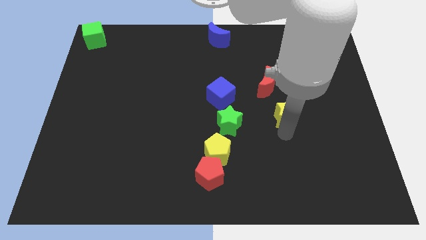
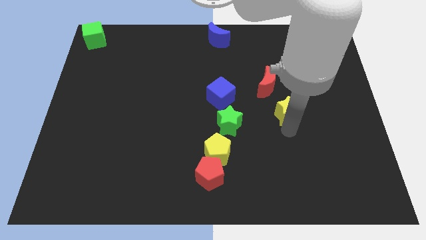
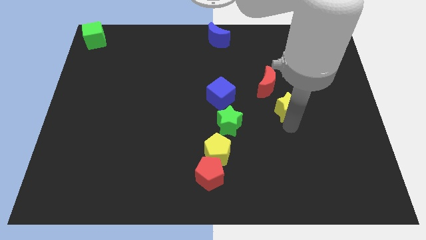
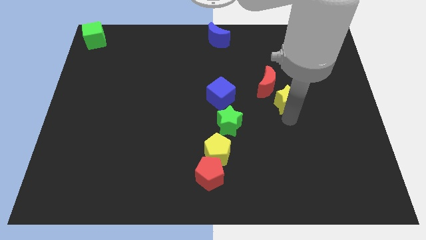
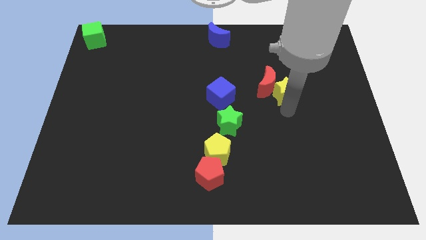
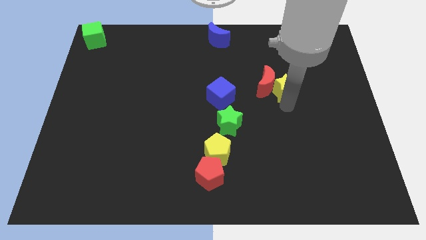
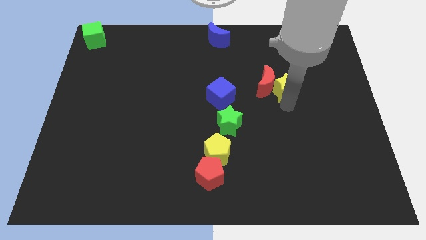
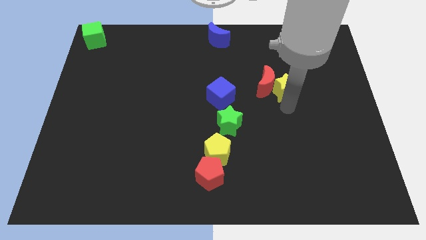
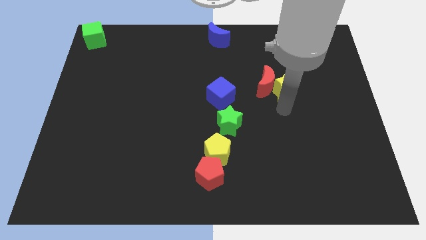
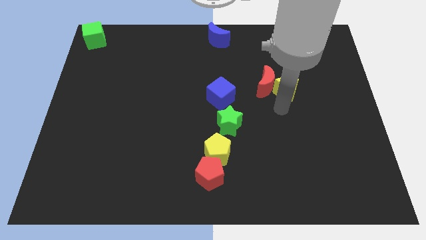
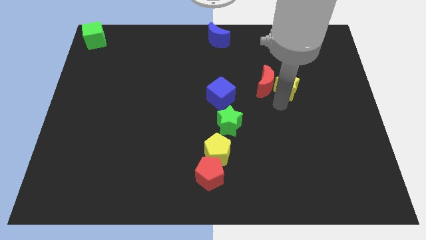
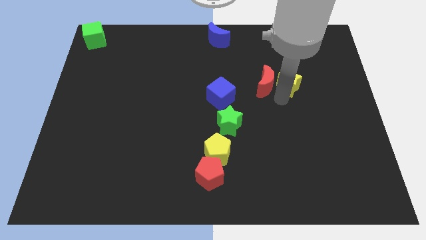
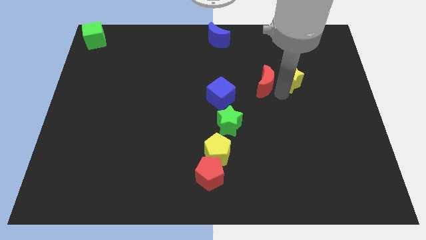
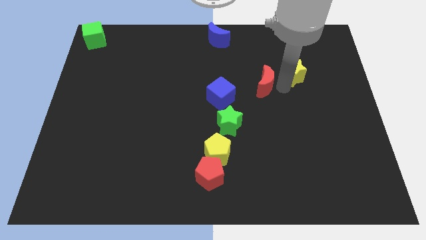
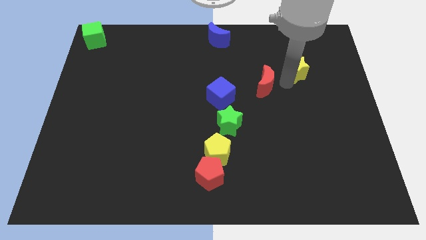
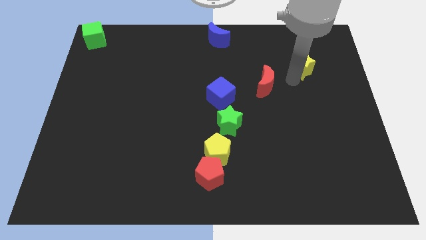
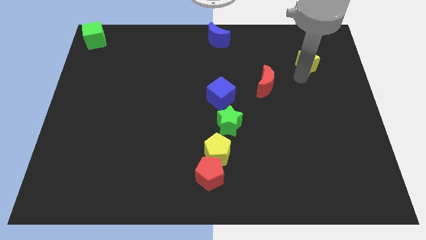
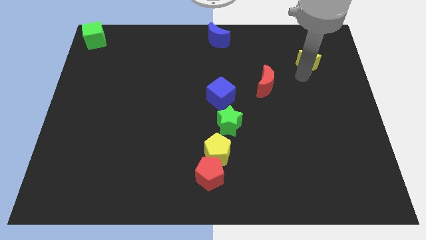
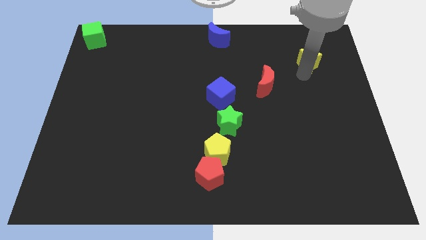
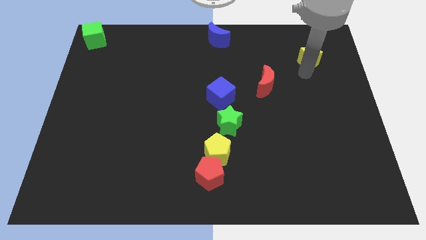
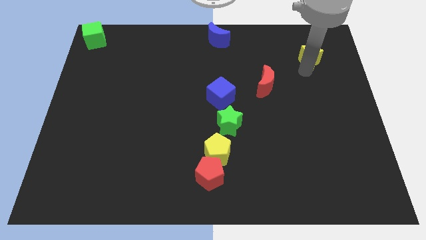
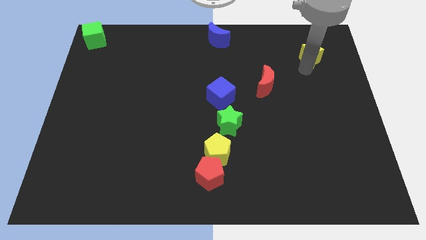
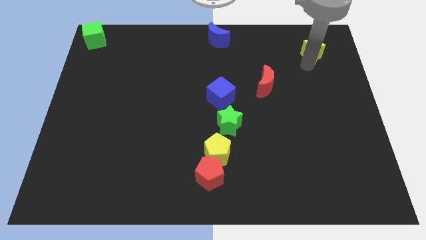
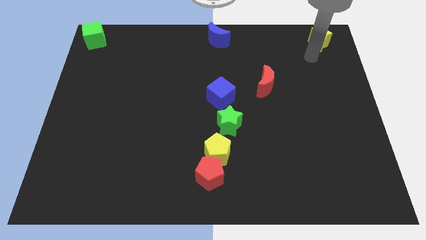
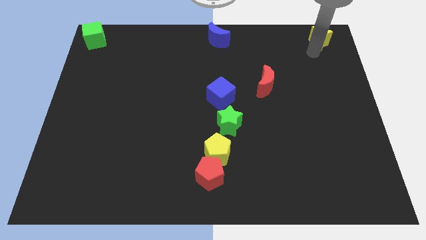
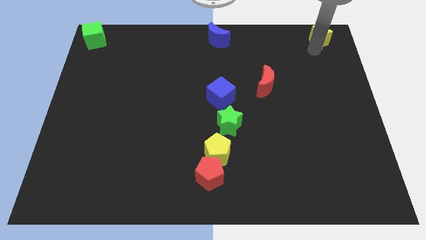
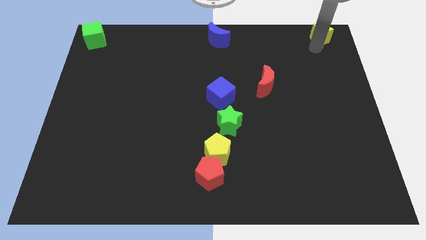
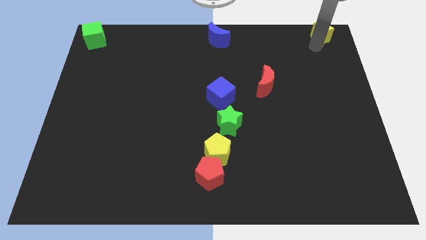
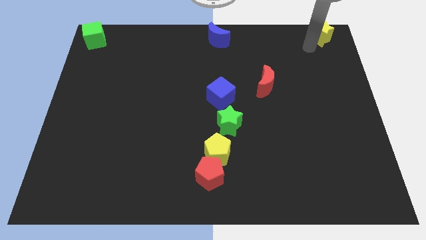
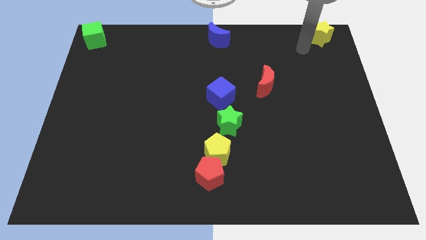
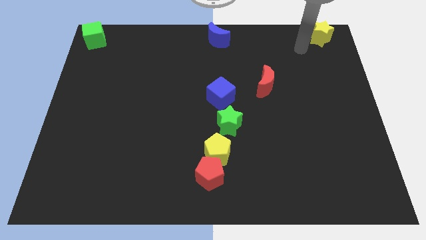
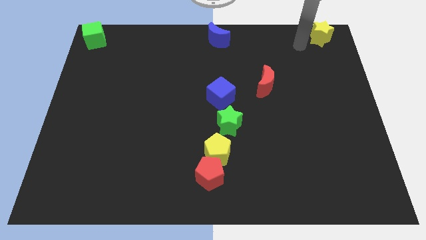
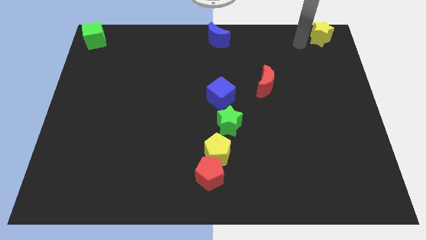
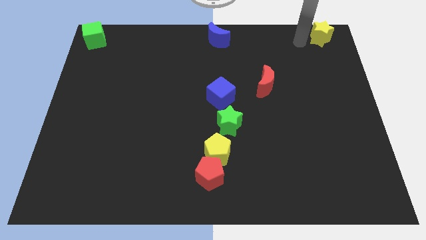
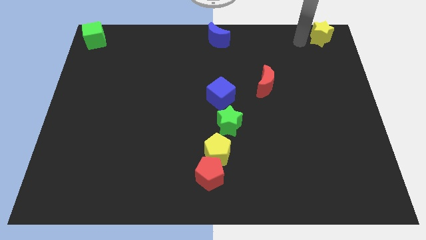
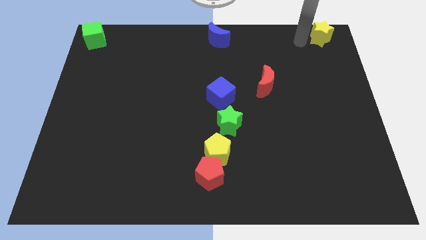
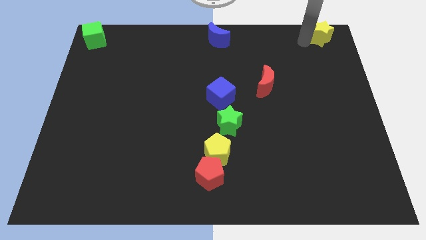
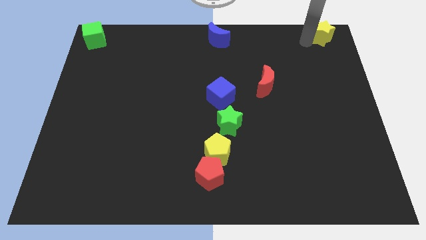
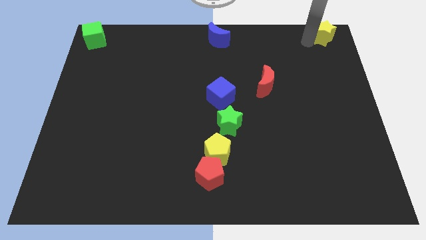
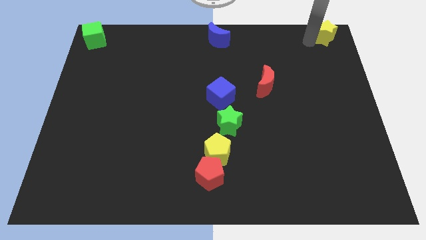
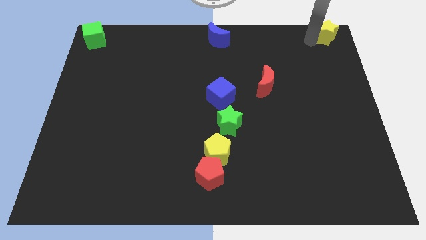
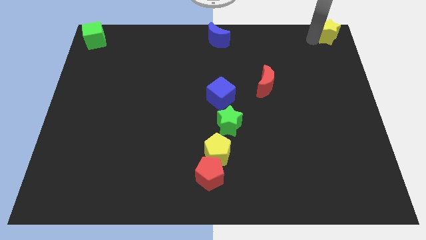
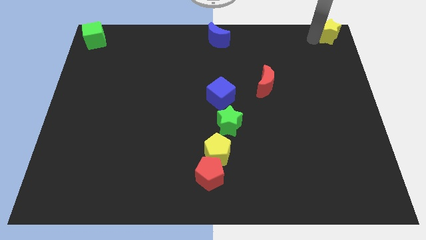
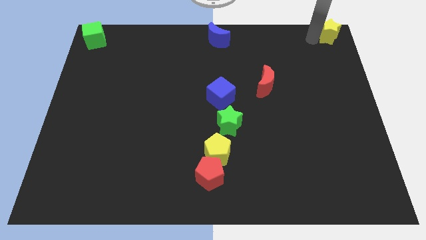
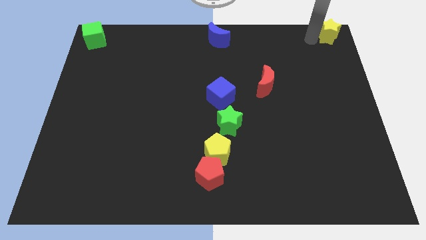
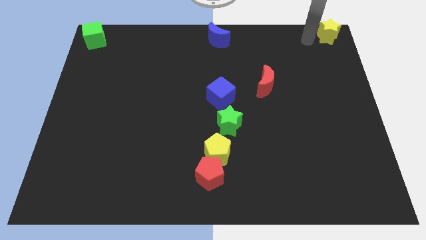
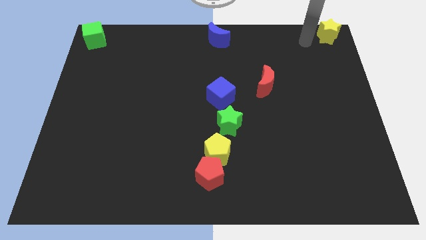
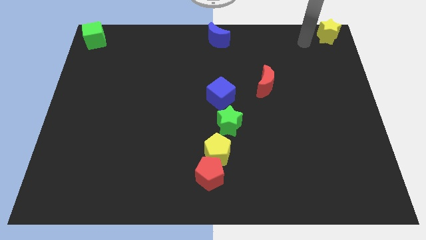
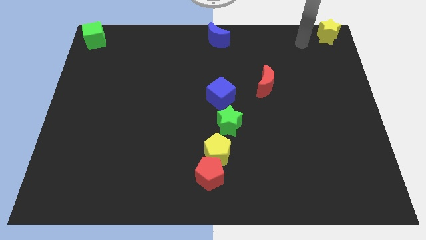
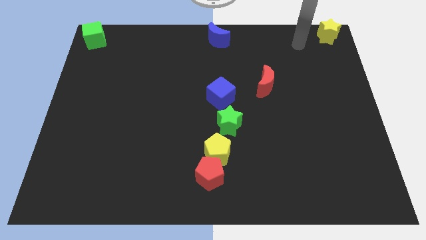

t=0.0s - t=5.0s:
place the yellow star to the top right corner side

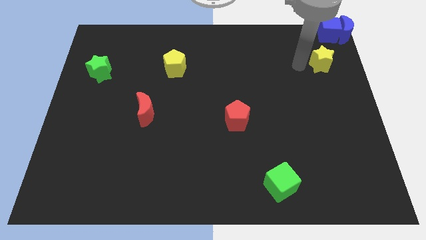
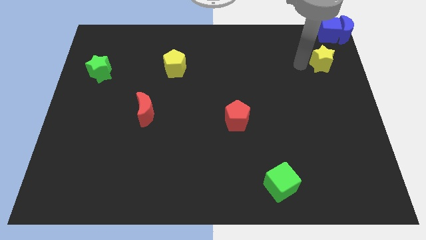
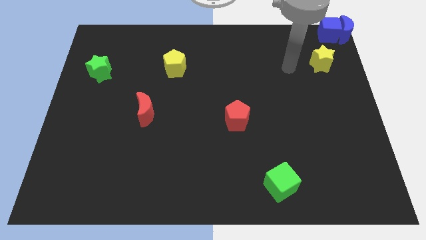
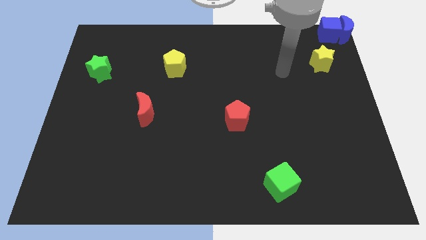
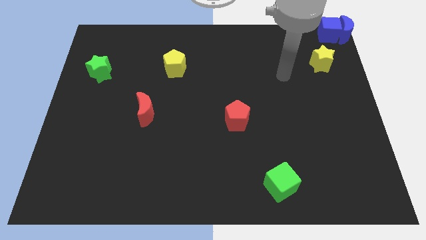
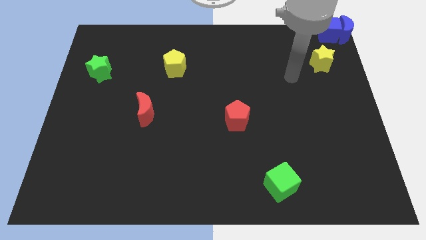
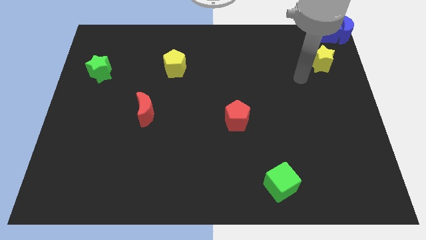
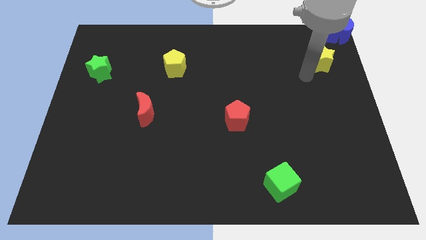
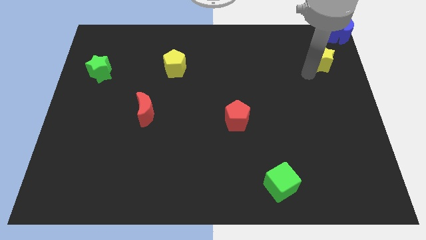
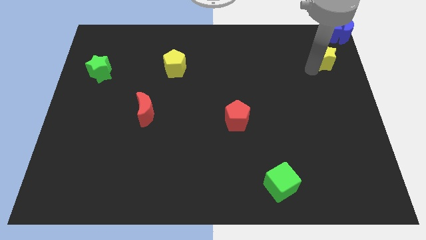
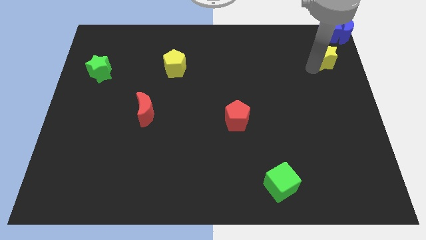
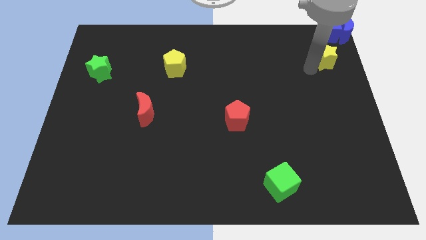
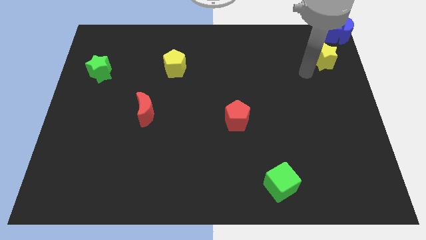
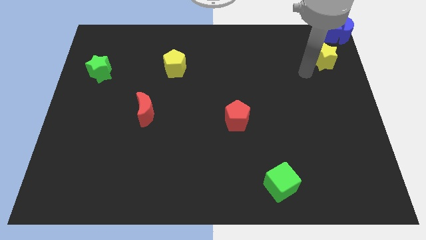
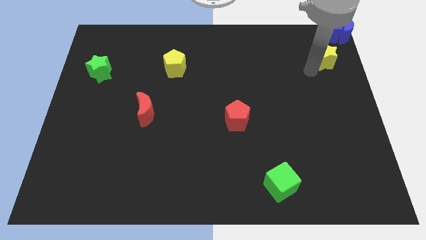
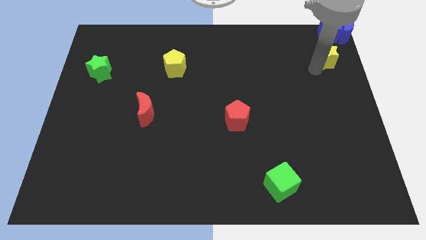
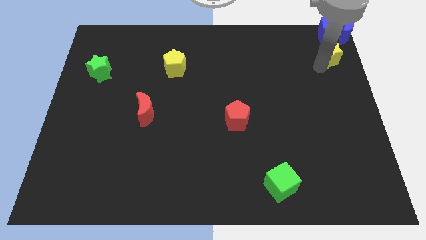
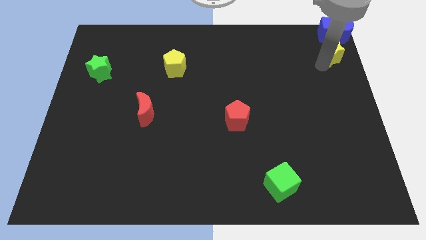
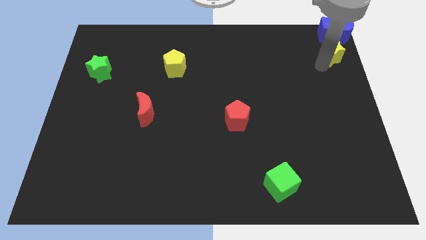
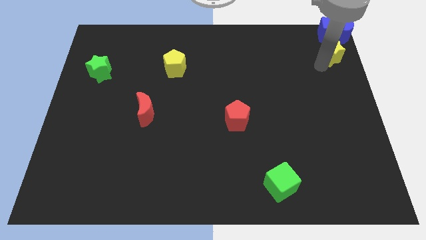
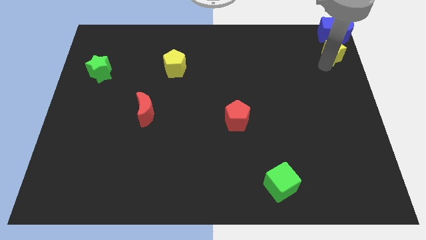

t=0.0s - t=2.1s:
push yellow star below blue cube

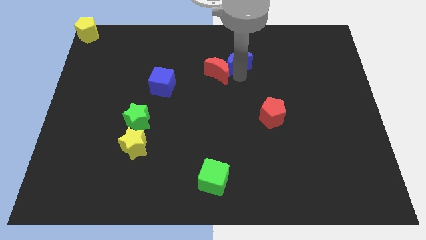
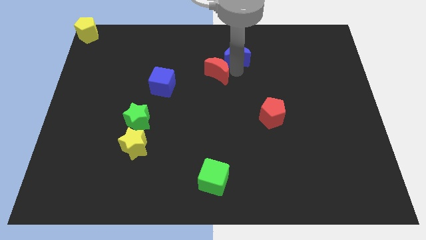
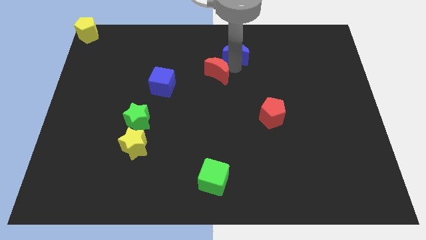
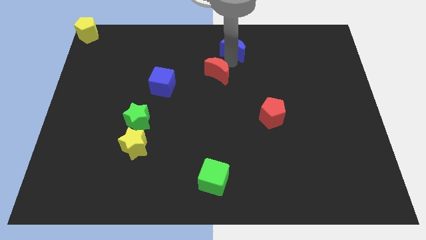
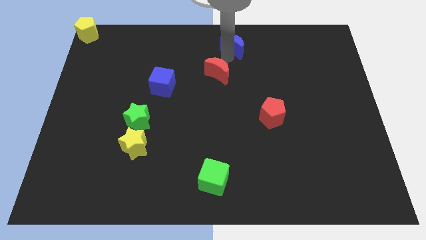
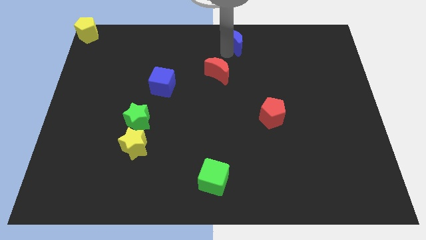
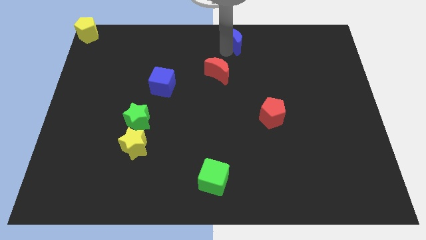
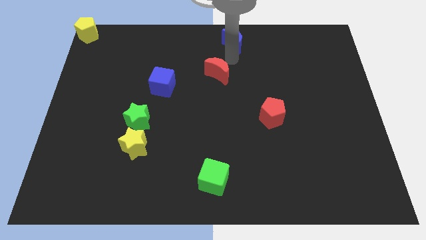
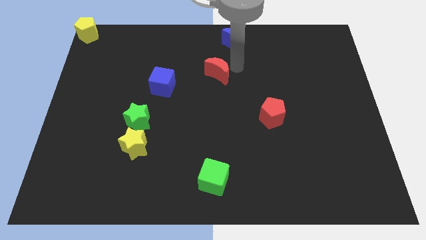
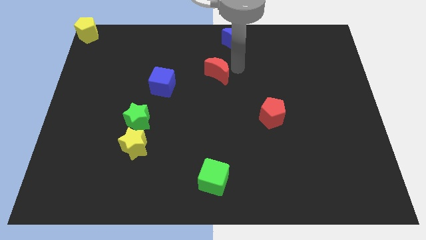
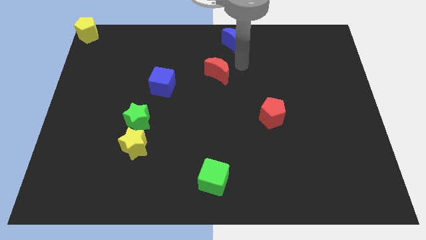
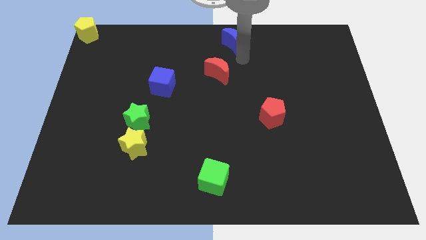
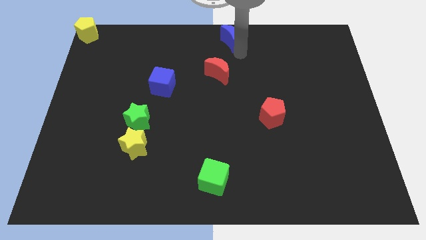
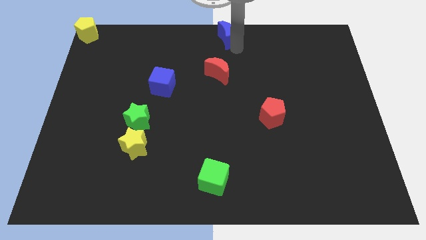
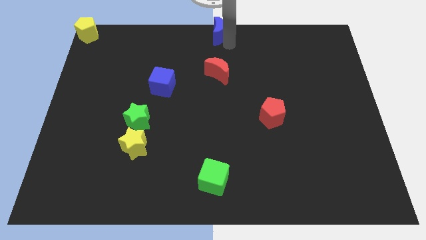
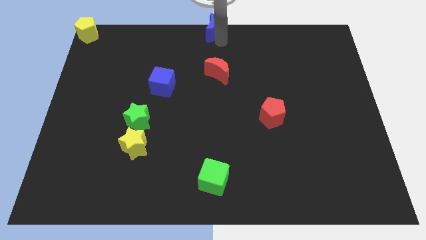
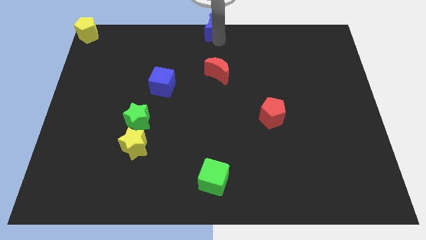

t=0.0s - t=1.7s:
place blue crescent above red crescent

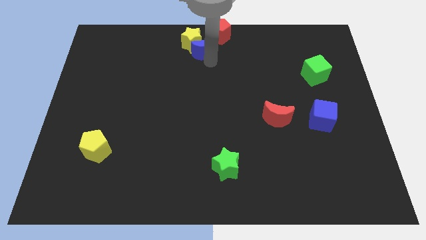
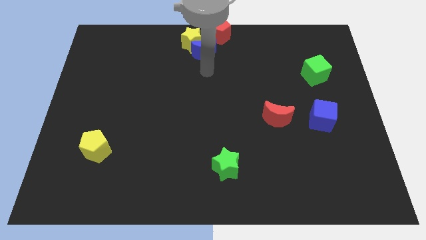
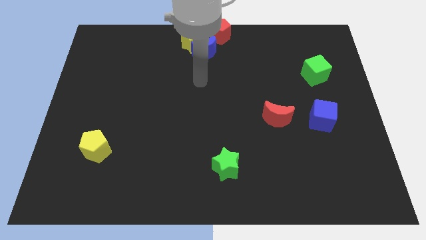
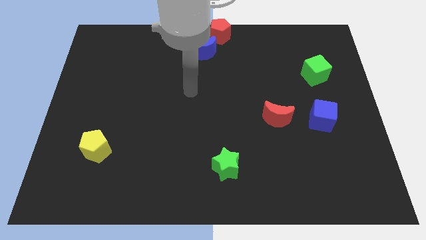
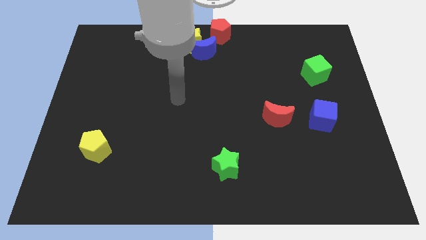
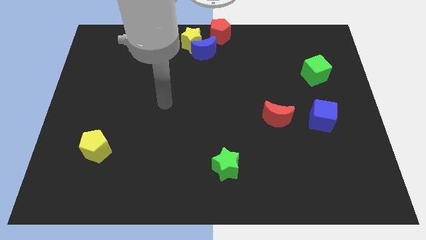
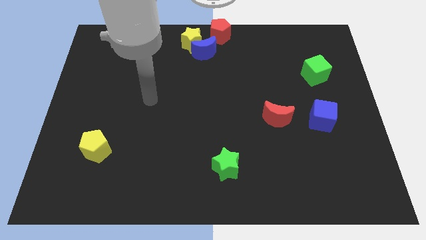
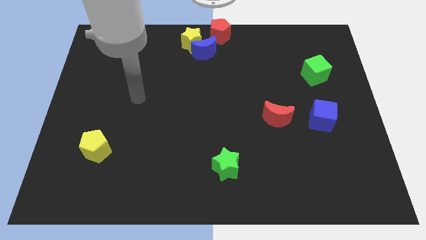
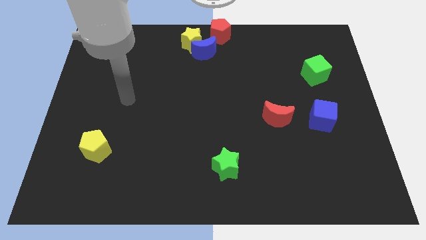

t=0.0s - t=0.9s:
move the arm away from the blue moon
